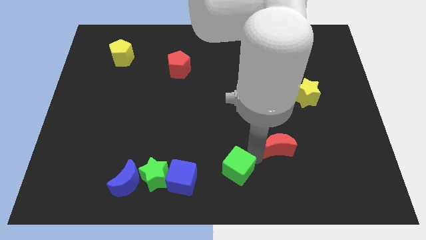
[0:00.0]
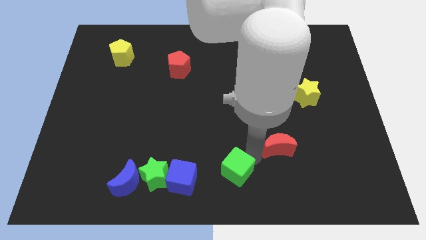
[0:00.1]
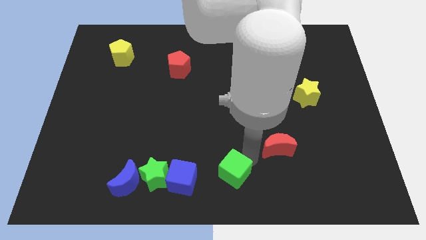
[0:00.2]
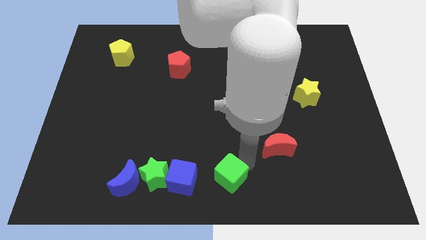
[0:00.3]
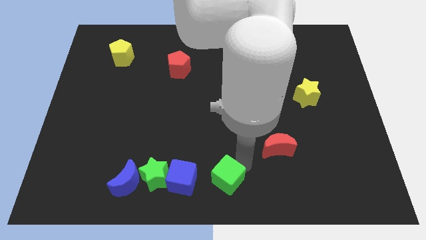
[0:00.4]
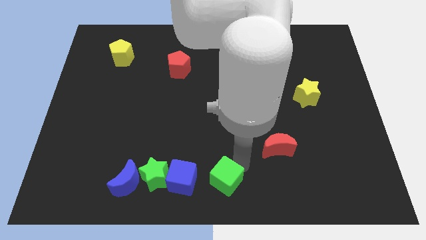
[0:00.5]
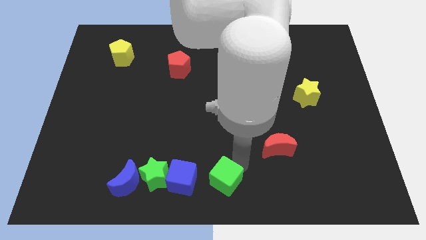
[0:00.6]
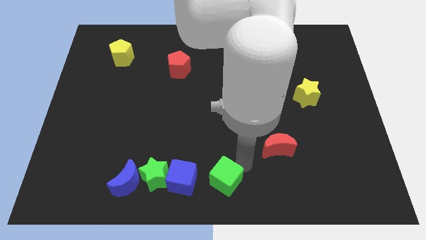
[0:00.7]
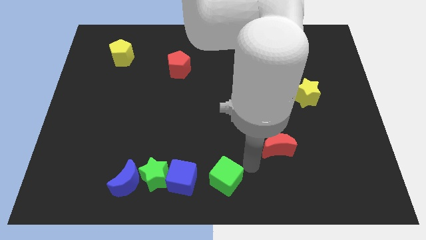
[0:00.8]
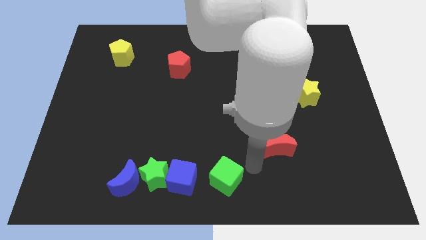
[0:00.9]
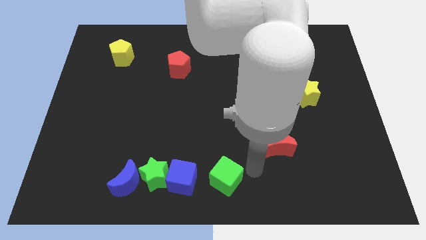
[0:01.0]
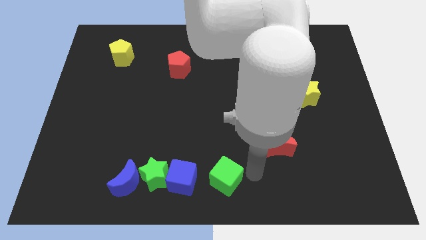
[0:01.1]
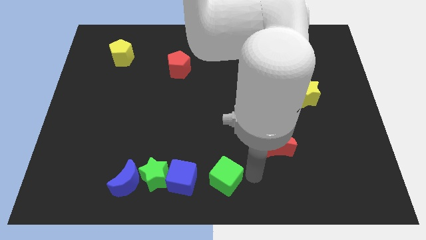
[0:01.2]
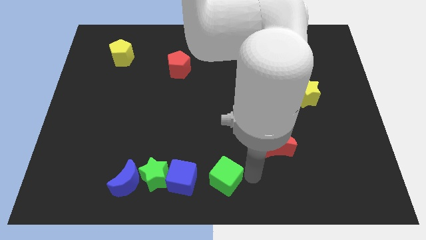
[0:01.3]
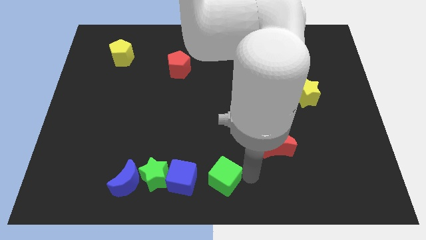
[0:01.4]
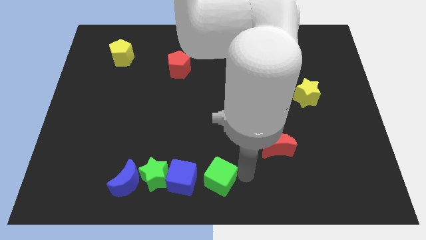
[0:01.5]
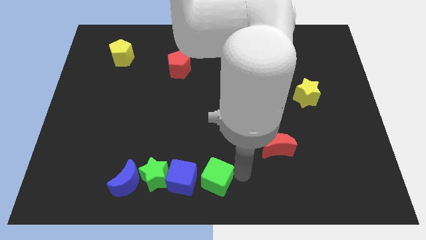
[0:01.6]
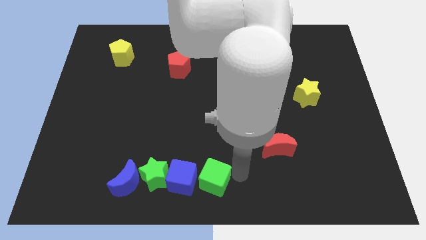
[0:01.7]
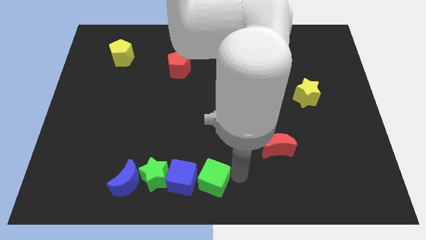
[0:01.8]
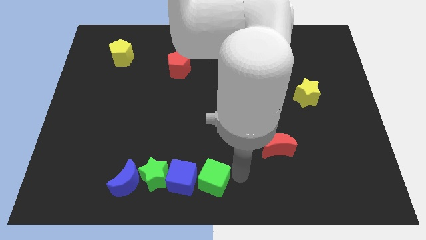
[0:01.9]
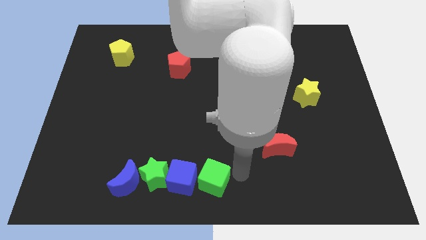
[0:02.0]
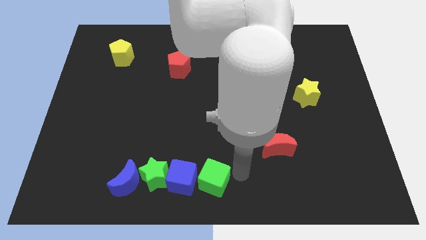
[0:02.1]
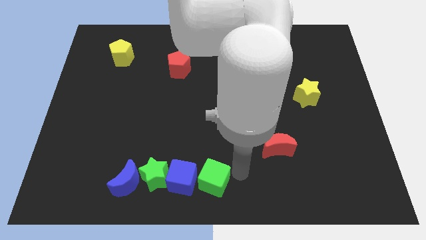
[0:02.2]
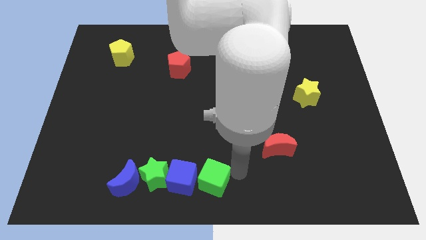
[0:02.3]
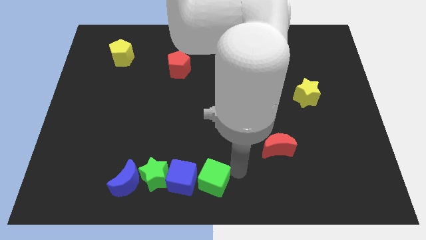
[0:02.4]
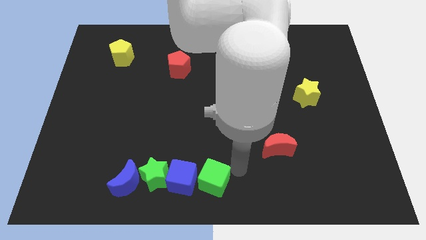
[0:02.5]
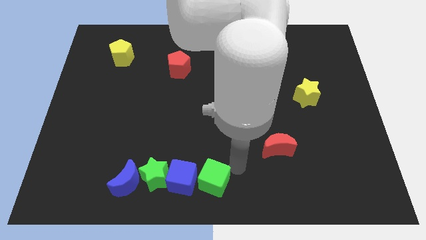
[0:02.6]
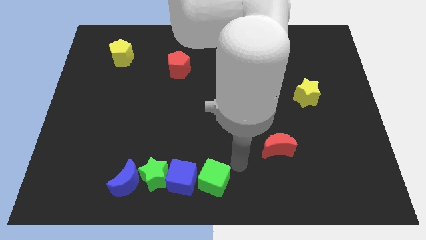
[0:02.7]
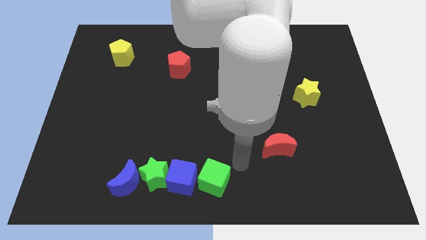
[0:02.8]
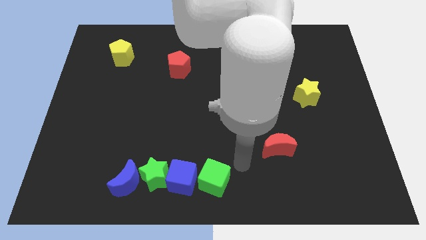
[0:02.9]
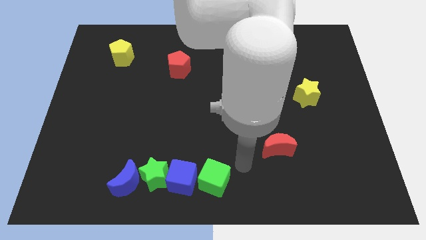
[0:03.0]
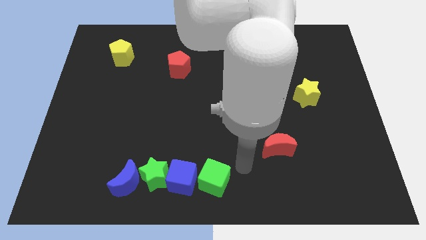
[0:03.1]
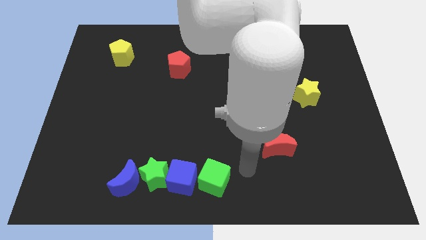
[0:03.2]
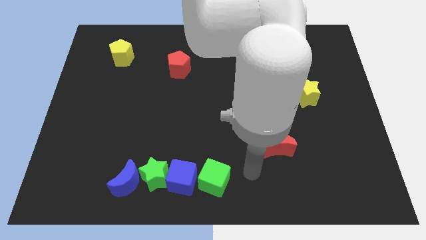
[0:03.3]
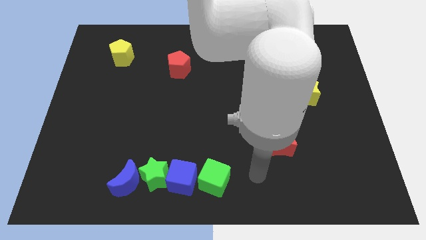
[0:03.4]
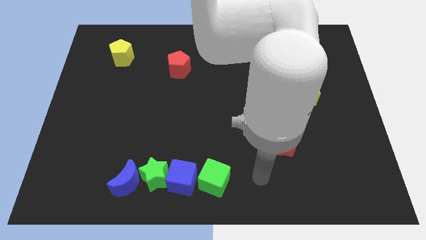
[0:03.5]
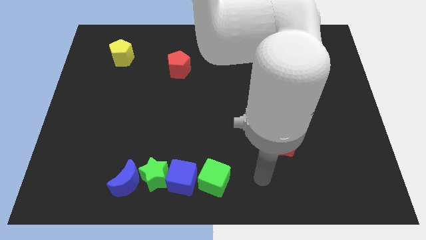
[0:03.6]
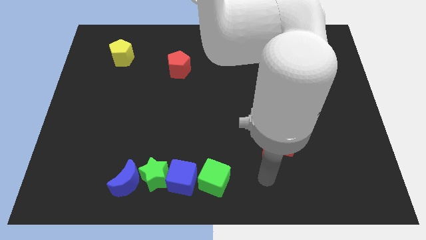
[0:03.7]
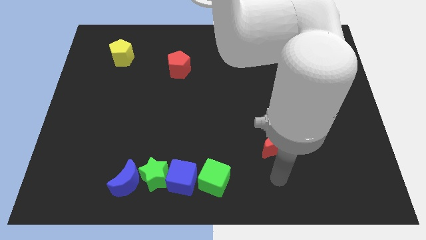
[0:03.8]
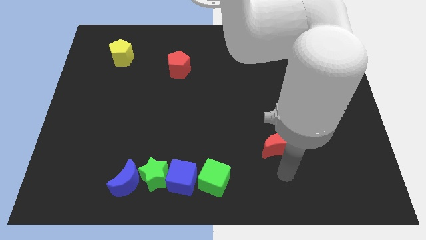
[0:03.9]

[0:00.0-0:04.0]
push green square right to the blue square

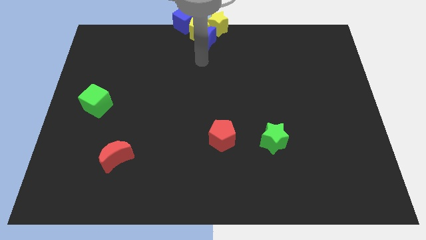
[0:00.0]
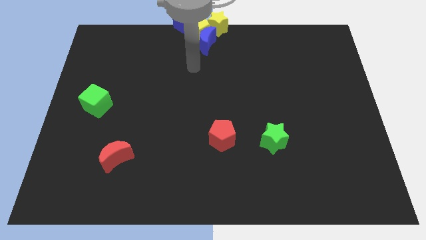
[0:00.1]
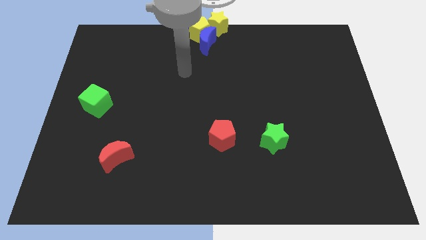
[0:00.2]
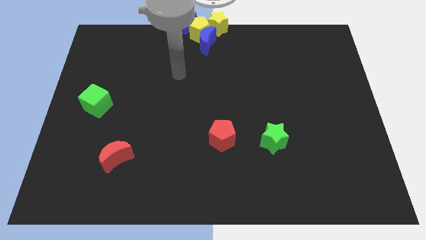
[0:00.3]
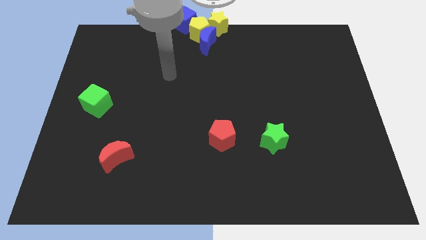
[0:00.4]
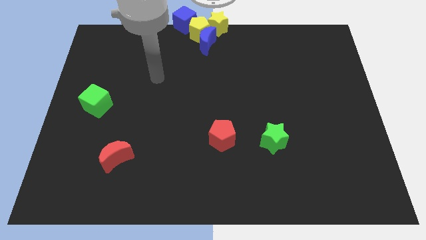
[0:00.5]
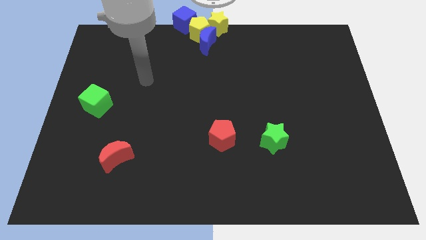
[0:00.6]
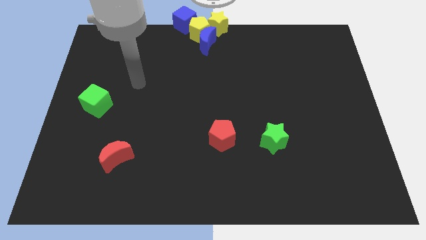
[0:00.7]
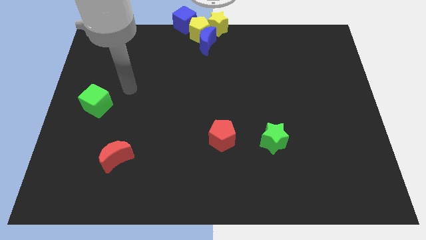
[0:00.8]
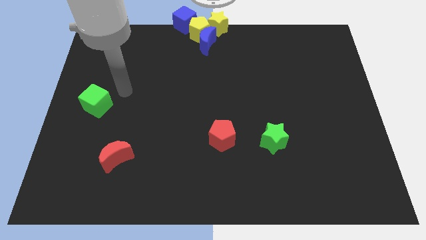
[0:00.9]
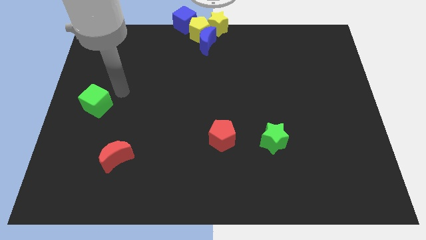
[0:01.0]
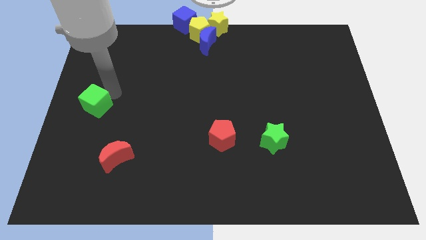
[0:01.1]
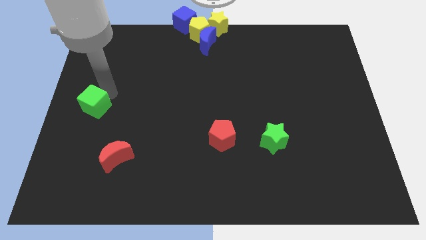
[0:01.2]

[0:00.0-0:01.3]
move the arm towards the green cube

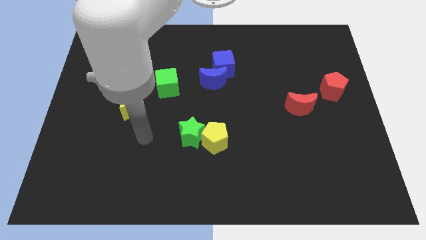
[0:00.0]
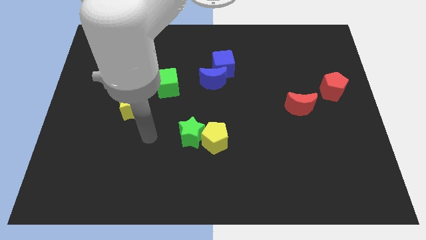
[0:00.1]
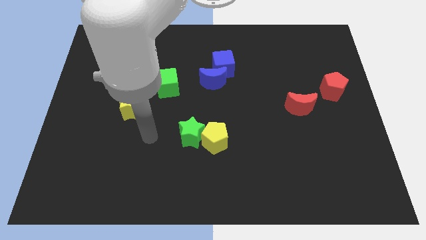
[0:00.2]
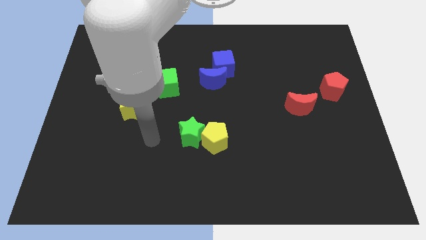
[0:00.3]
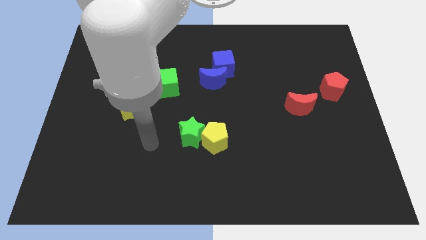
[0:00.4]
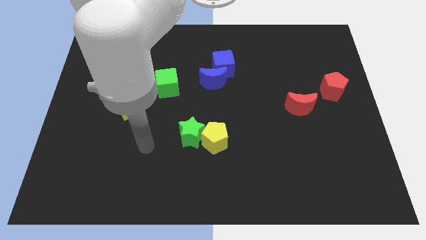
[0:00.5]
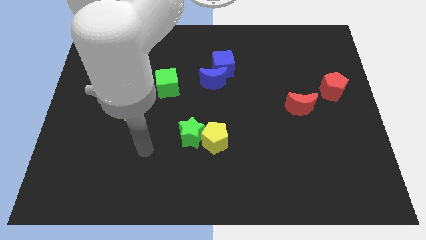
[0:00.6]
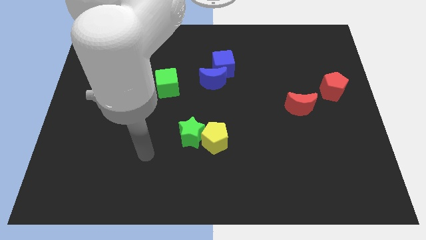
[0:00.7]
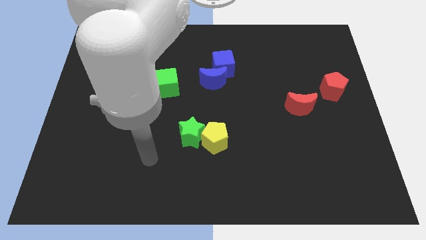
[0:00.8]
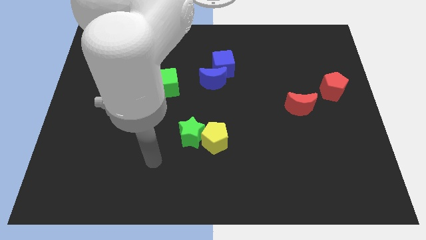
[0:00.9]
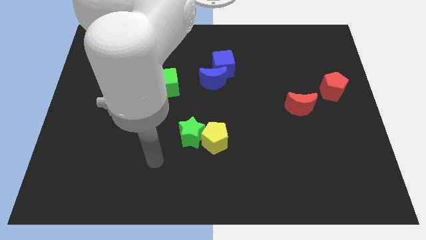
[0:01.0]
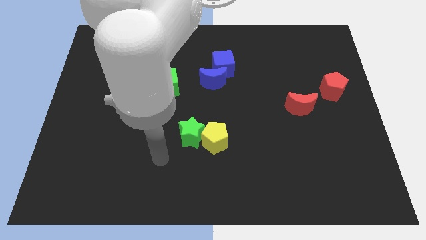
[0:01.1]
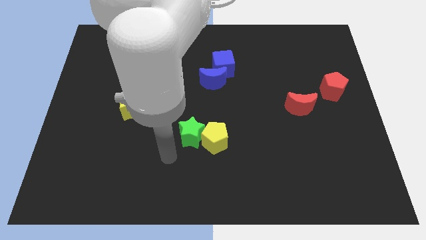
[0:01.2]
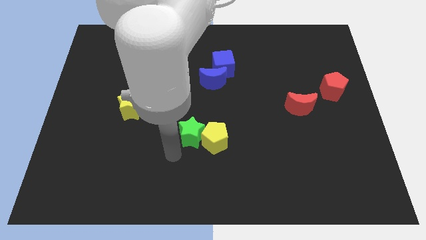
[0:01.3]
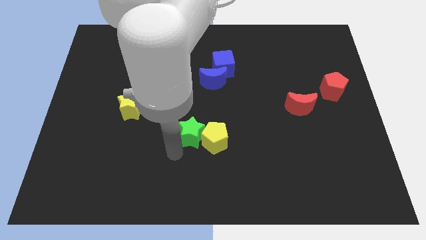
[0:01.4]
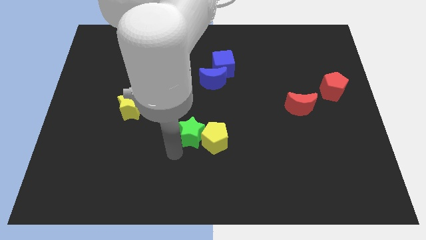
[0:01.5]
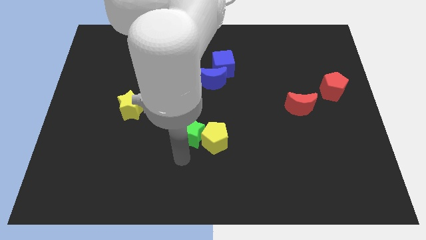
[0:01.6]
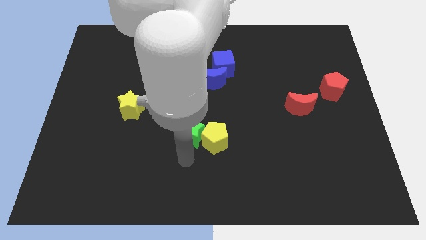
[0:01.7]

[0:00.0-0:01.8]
move the arm towards the green star

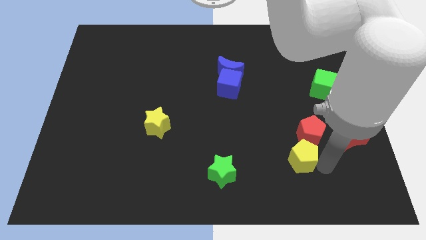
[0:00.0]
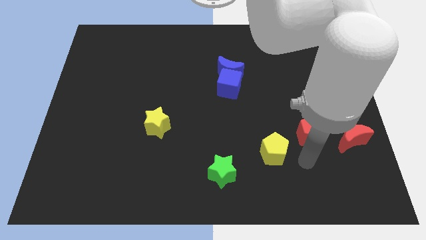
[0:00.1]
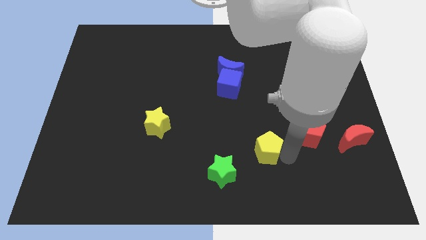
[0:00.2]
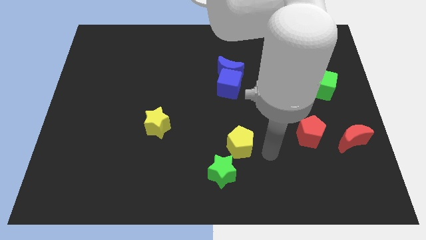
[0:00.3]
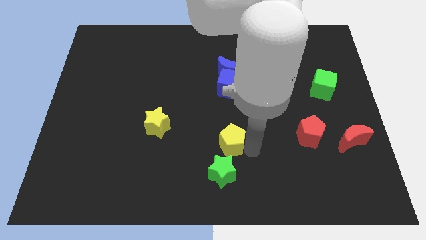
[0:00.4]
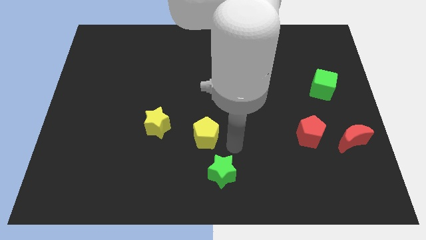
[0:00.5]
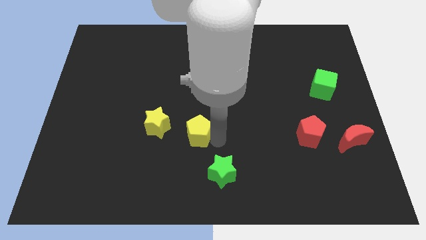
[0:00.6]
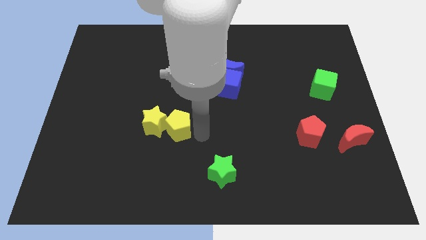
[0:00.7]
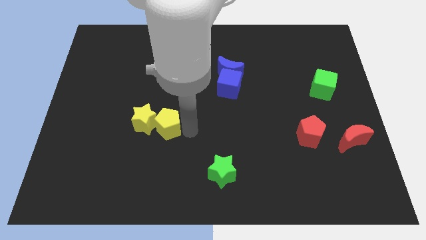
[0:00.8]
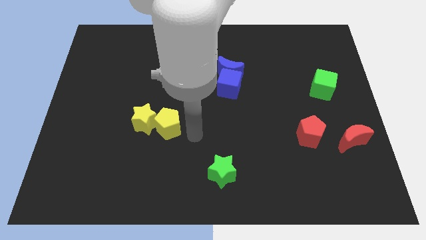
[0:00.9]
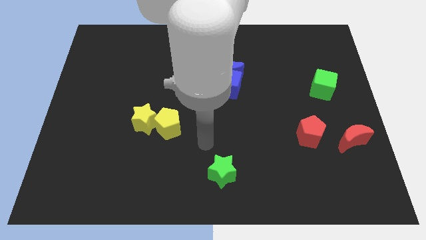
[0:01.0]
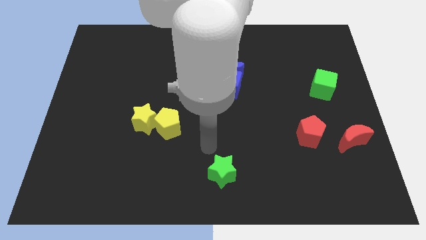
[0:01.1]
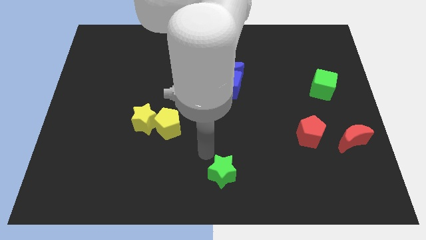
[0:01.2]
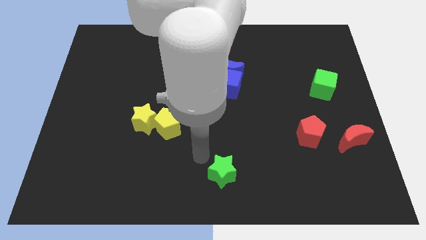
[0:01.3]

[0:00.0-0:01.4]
put the yellow block to the yellow star

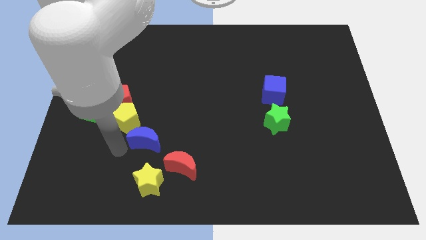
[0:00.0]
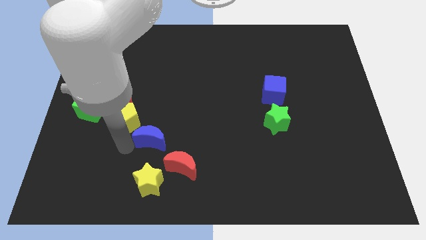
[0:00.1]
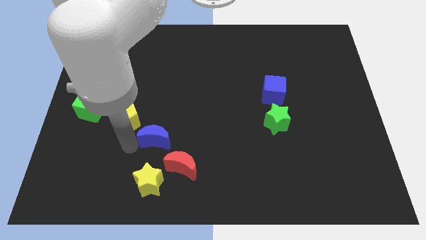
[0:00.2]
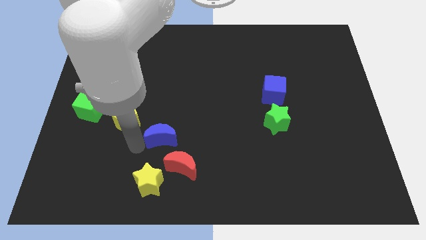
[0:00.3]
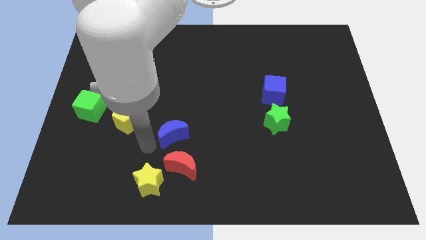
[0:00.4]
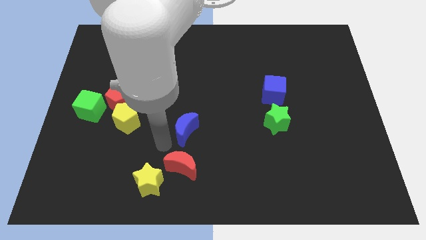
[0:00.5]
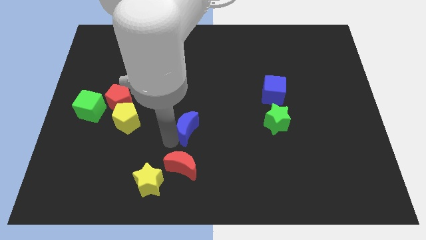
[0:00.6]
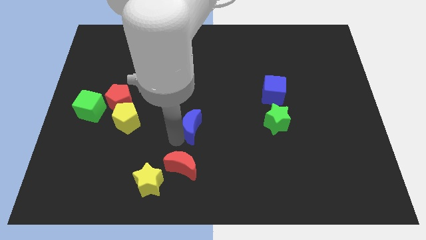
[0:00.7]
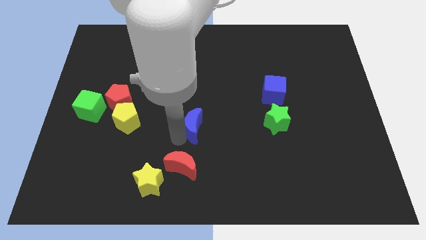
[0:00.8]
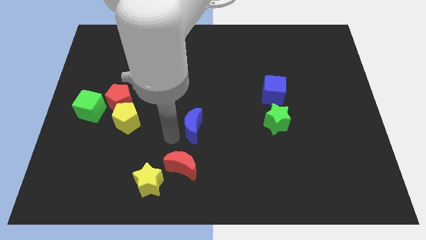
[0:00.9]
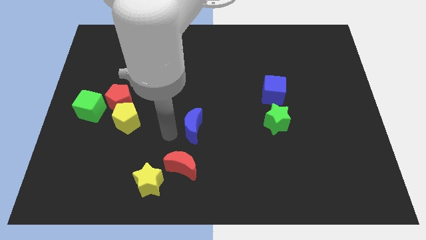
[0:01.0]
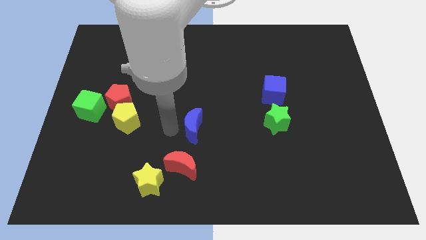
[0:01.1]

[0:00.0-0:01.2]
push the blue crescent to the center of the board
